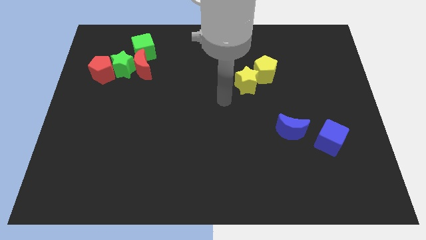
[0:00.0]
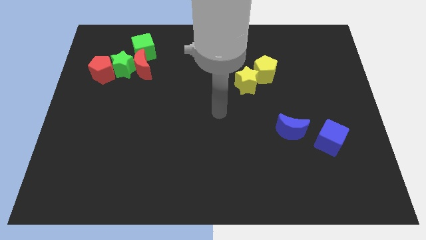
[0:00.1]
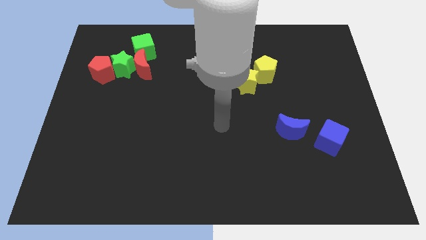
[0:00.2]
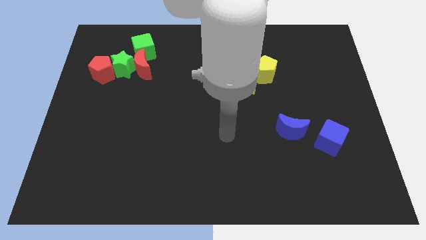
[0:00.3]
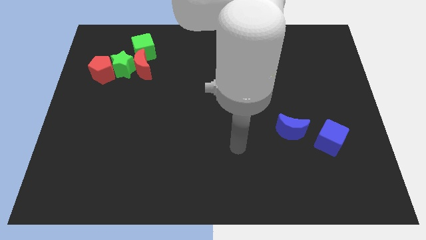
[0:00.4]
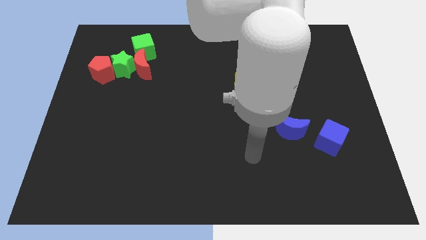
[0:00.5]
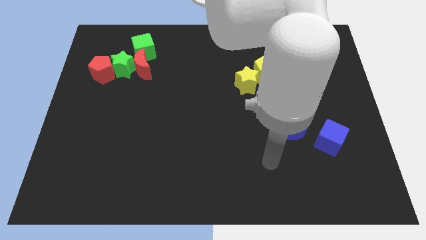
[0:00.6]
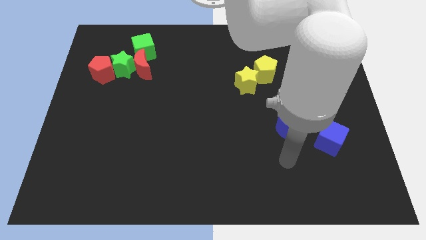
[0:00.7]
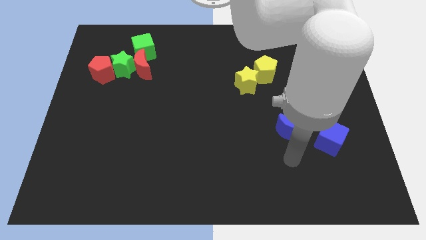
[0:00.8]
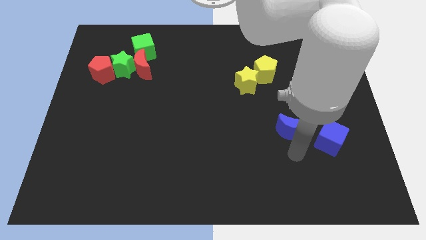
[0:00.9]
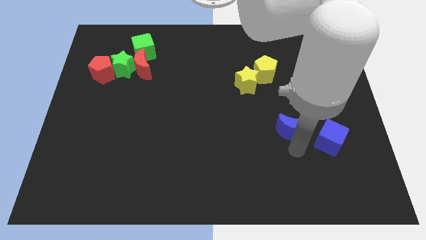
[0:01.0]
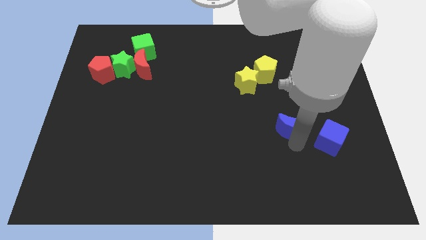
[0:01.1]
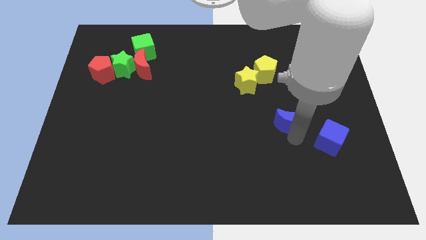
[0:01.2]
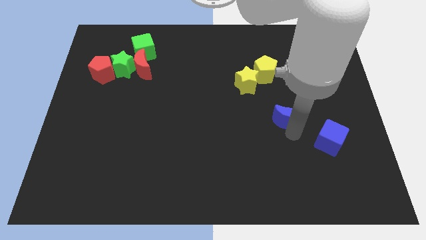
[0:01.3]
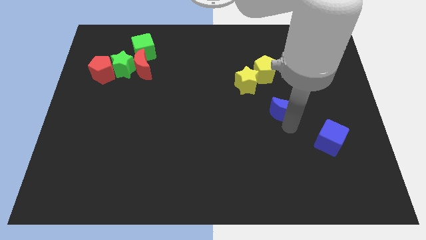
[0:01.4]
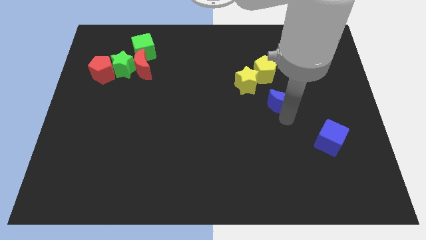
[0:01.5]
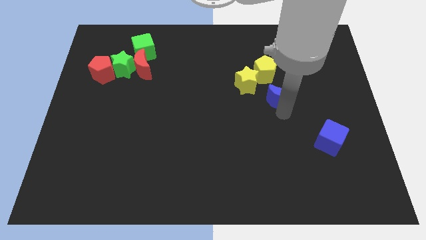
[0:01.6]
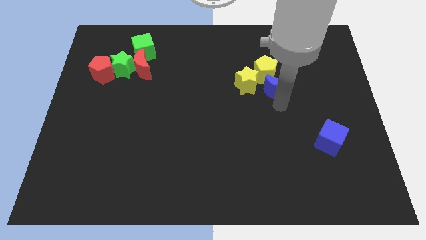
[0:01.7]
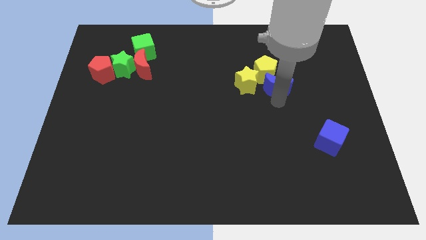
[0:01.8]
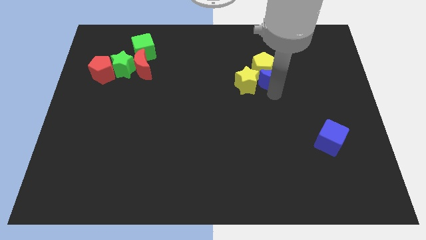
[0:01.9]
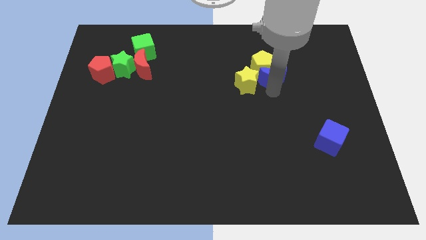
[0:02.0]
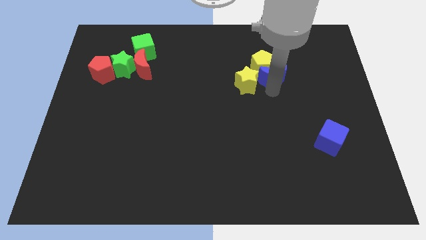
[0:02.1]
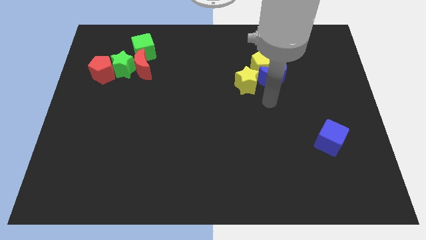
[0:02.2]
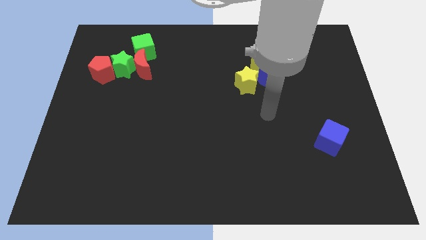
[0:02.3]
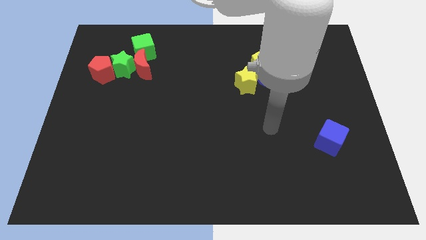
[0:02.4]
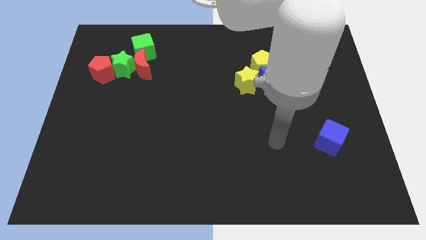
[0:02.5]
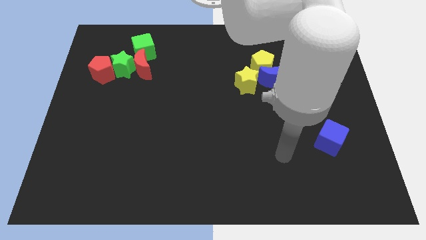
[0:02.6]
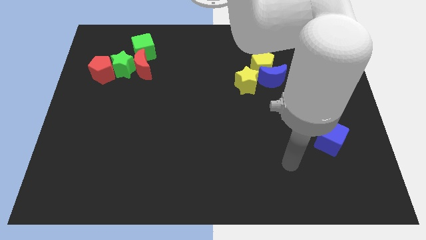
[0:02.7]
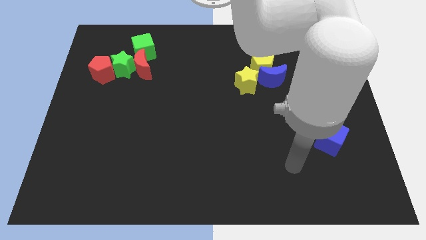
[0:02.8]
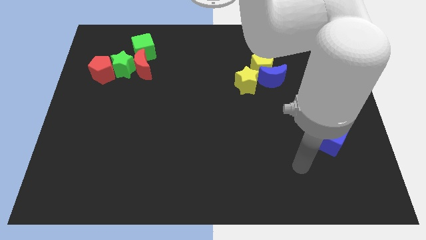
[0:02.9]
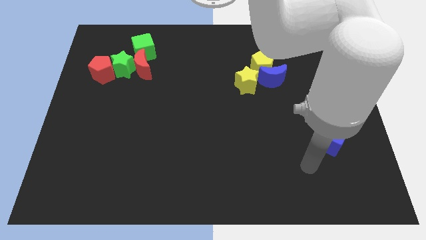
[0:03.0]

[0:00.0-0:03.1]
move the blue moon into yellow pentagon

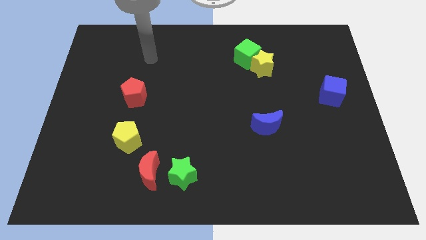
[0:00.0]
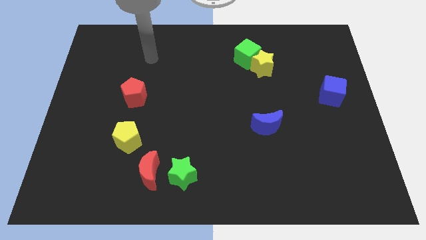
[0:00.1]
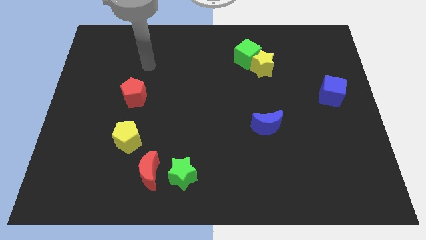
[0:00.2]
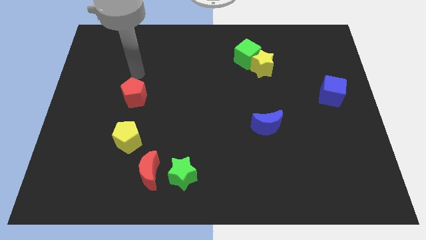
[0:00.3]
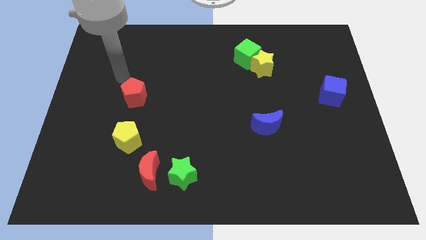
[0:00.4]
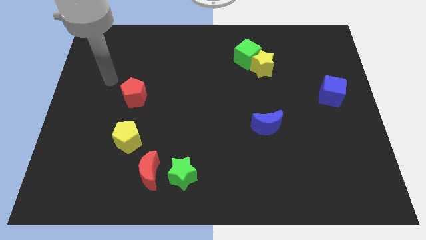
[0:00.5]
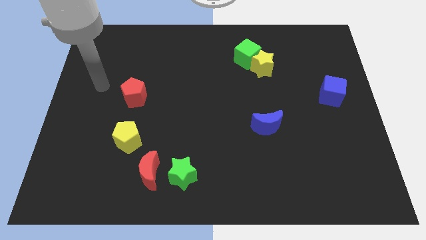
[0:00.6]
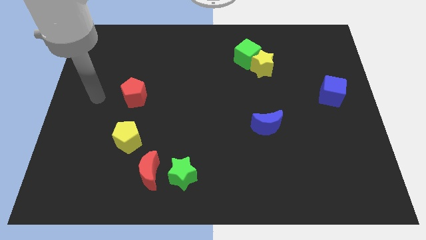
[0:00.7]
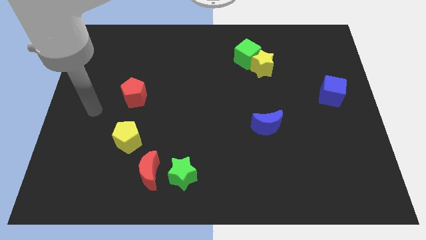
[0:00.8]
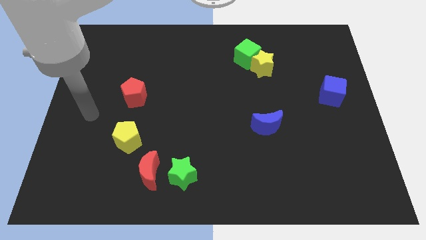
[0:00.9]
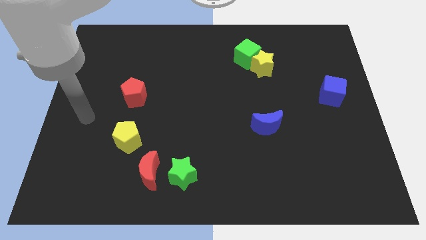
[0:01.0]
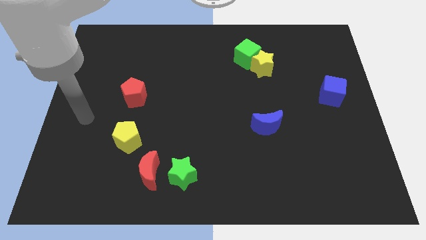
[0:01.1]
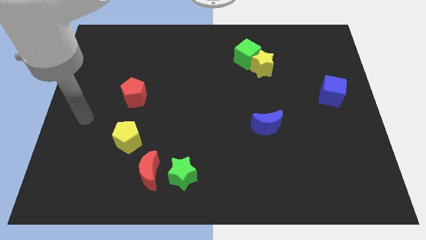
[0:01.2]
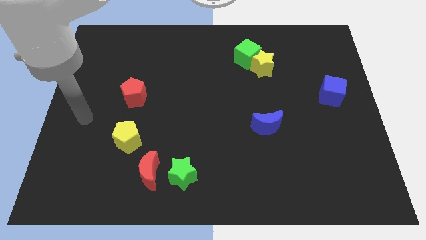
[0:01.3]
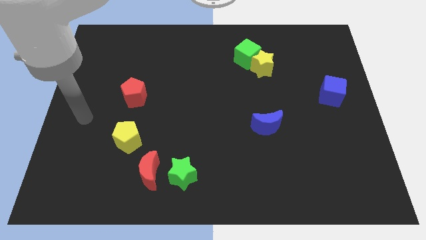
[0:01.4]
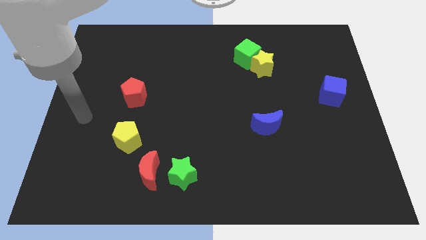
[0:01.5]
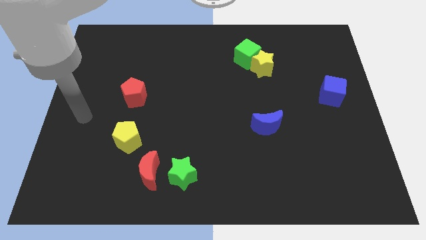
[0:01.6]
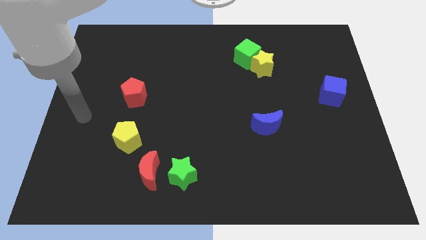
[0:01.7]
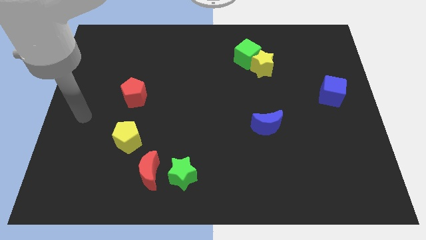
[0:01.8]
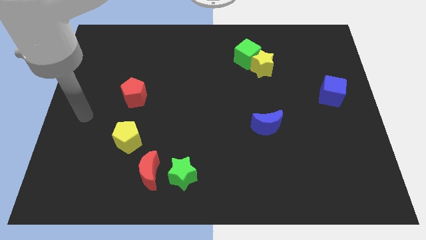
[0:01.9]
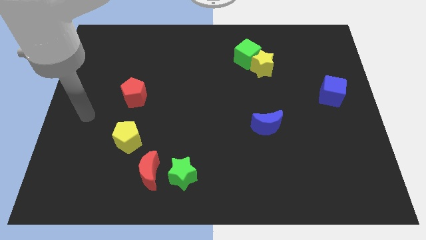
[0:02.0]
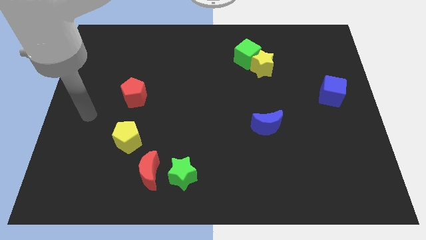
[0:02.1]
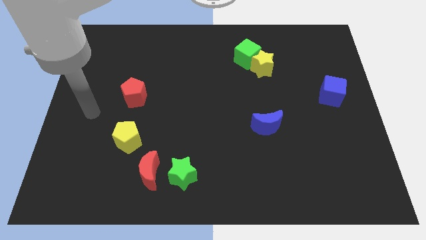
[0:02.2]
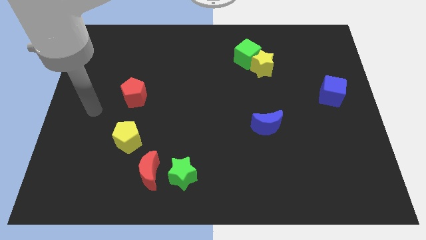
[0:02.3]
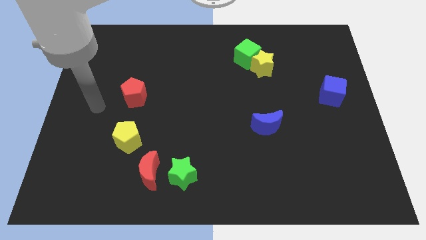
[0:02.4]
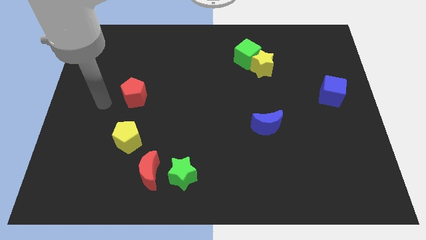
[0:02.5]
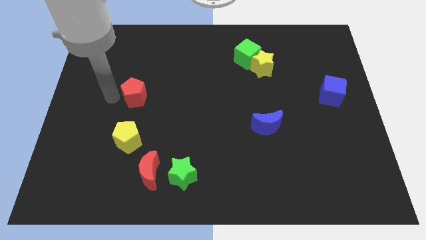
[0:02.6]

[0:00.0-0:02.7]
point the arm to the left of the red pentagon

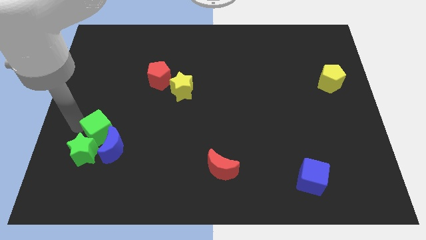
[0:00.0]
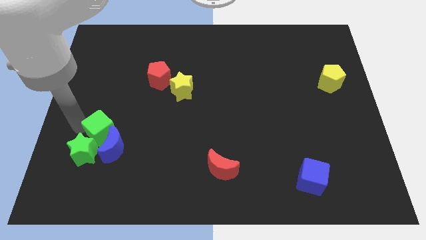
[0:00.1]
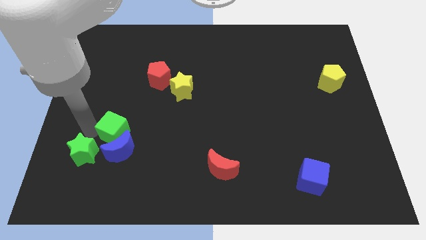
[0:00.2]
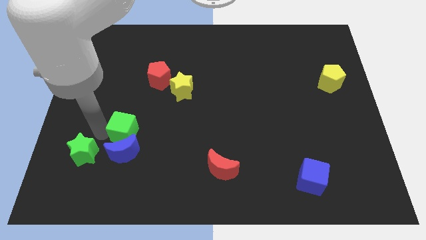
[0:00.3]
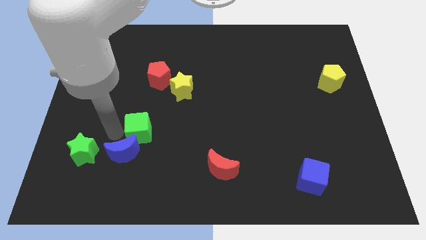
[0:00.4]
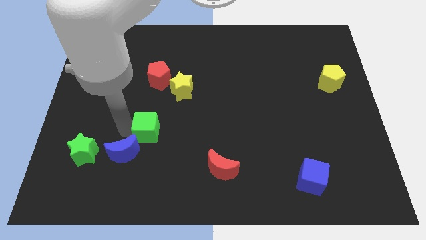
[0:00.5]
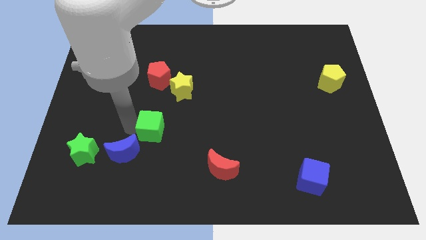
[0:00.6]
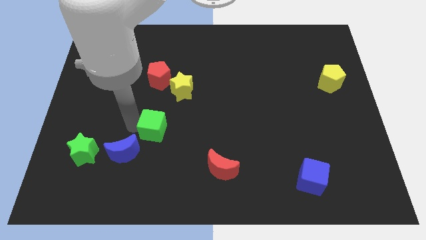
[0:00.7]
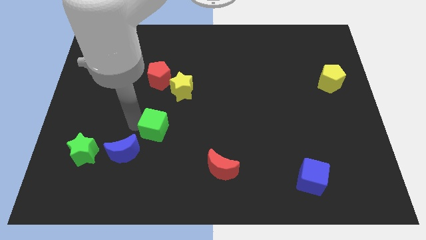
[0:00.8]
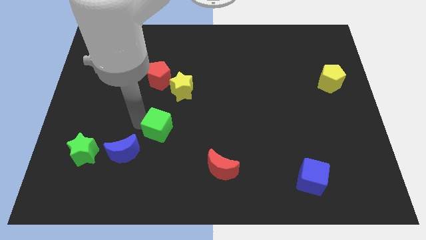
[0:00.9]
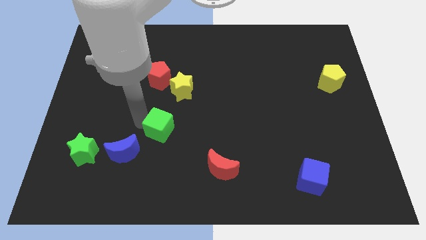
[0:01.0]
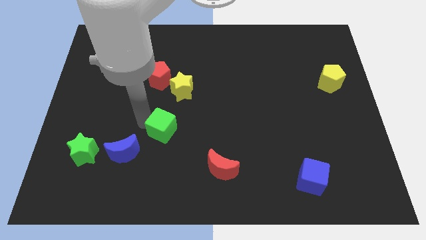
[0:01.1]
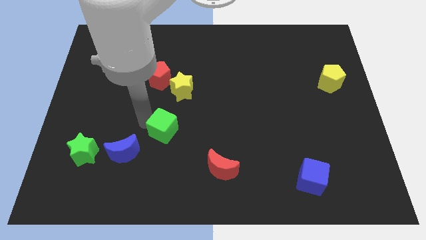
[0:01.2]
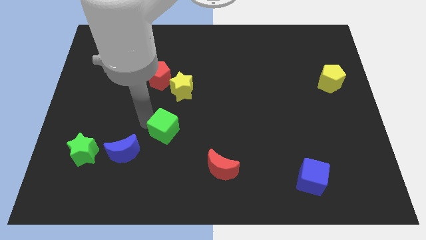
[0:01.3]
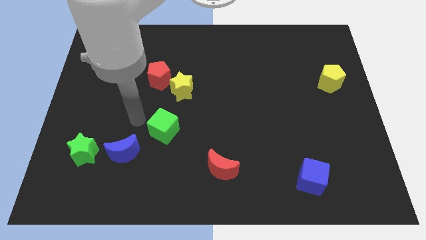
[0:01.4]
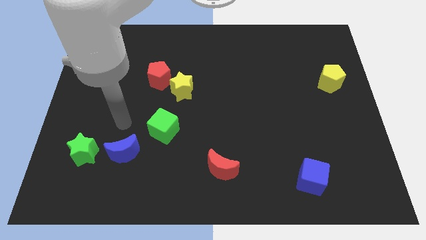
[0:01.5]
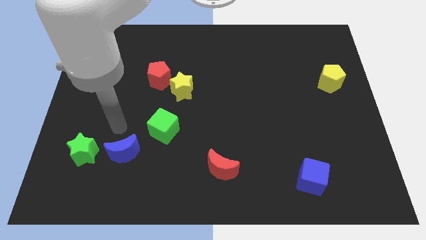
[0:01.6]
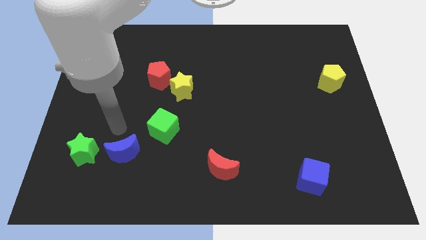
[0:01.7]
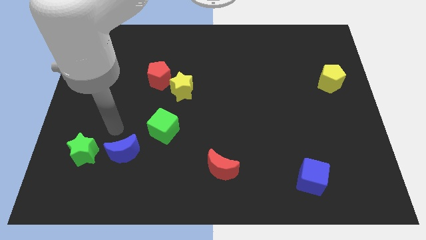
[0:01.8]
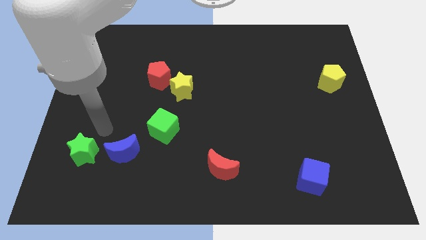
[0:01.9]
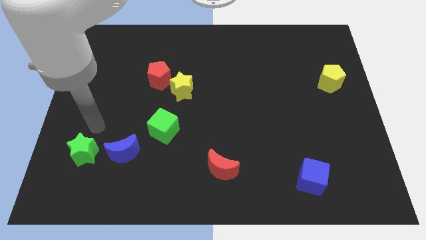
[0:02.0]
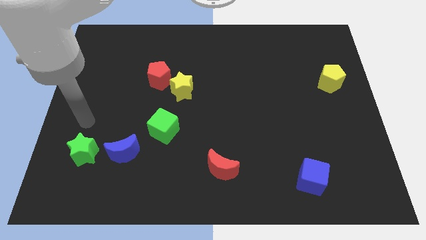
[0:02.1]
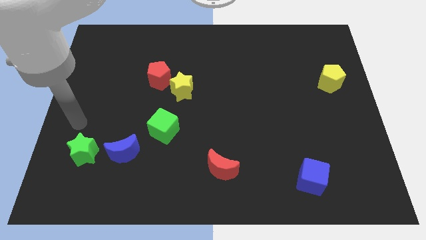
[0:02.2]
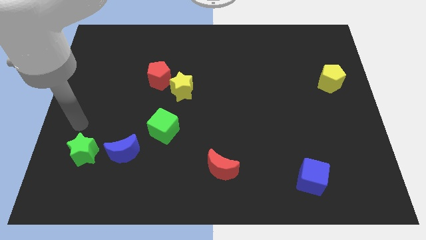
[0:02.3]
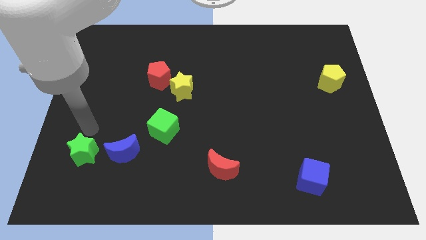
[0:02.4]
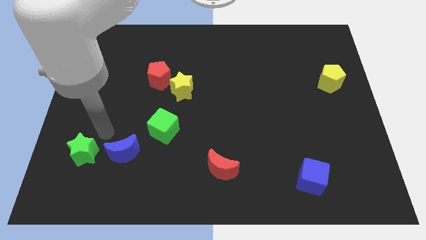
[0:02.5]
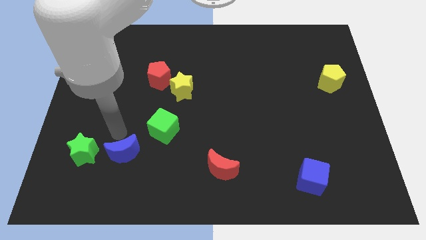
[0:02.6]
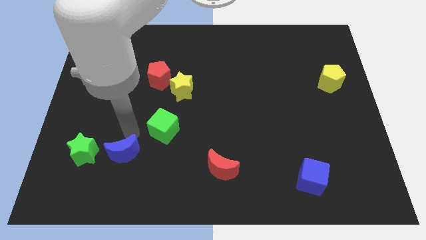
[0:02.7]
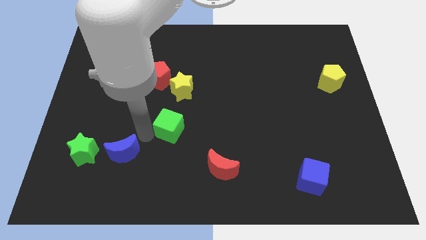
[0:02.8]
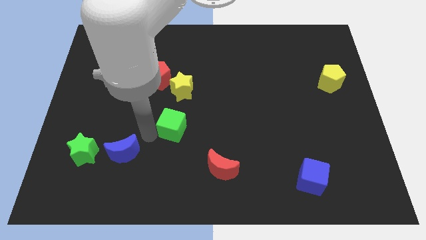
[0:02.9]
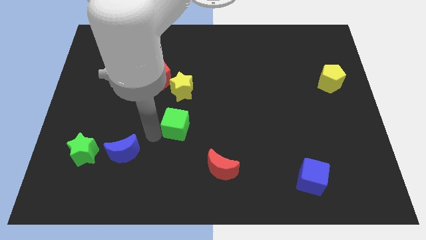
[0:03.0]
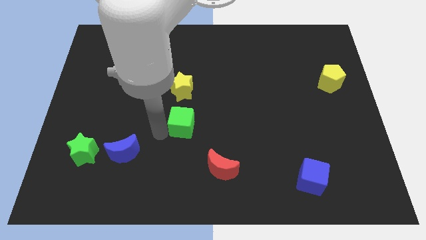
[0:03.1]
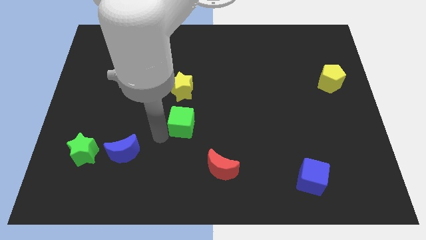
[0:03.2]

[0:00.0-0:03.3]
place the green cube to the bottom of the yellow star

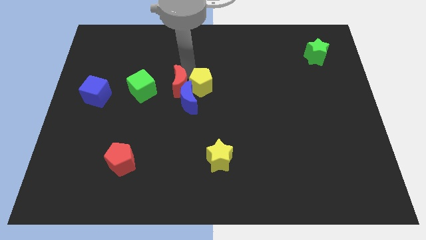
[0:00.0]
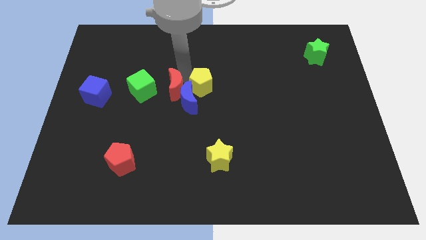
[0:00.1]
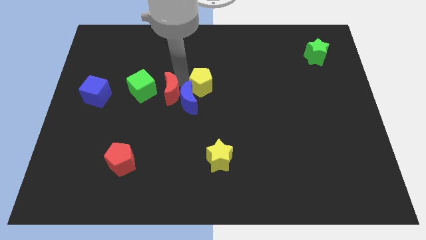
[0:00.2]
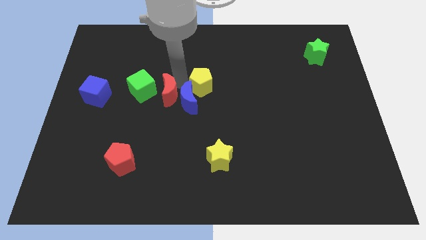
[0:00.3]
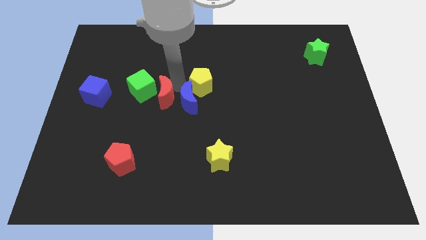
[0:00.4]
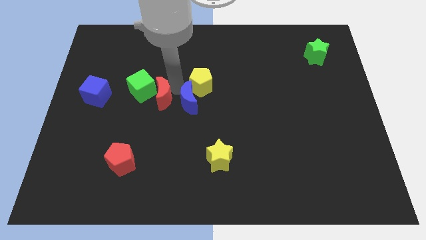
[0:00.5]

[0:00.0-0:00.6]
move the red crescent to the right of the green cube on the board
